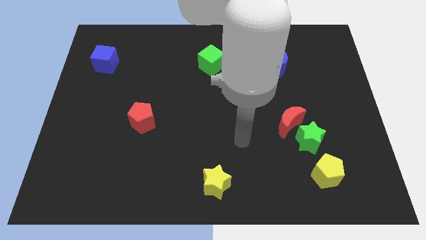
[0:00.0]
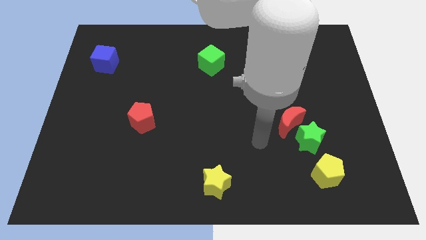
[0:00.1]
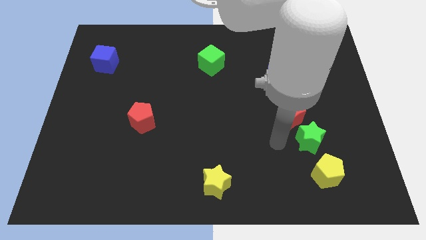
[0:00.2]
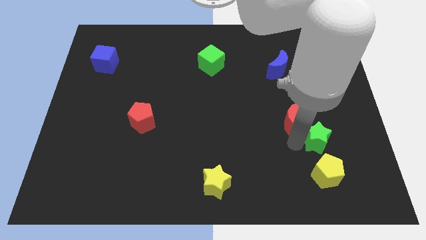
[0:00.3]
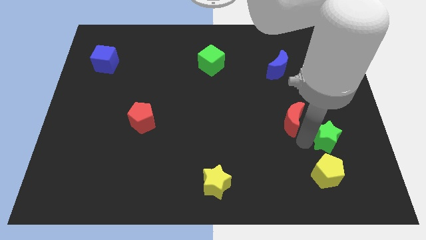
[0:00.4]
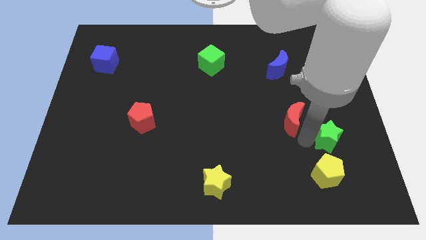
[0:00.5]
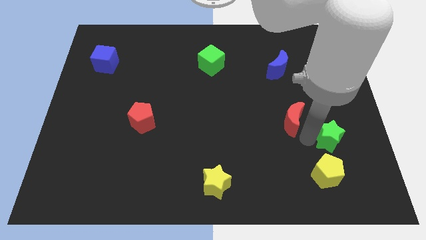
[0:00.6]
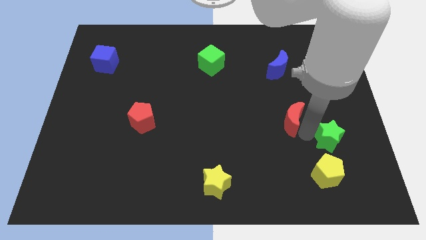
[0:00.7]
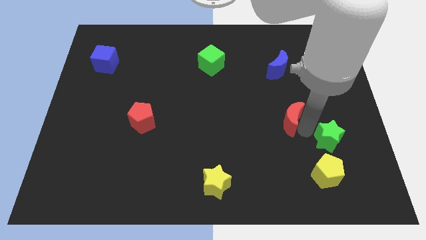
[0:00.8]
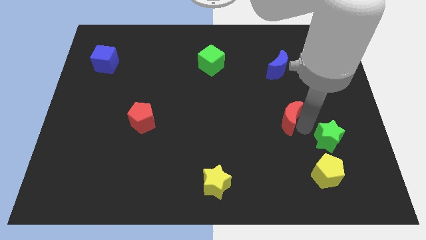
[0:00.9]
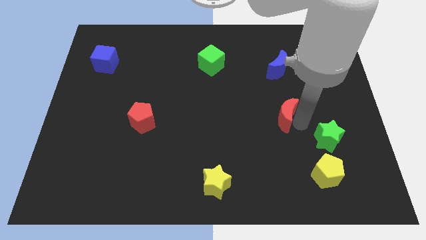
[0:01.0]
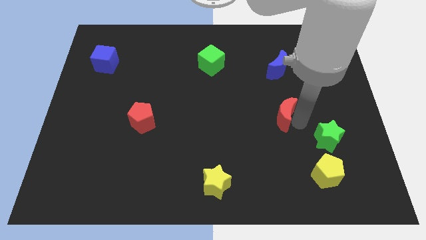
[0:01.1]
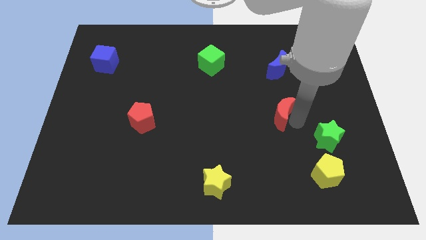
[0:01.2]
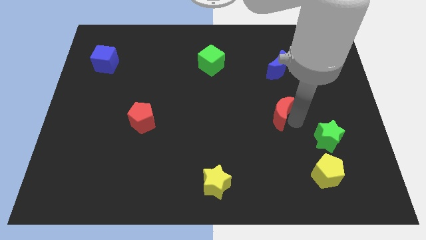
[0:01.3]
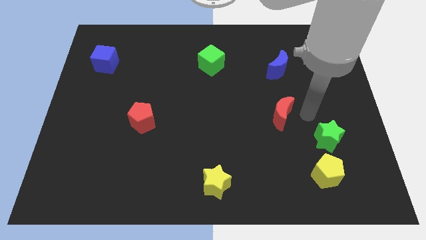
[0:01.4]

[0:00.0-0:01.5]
separate the red crescent from green star

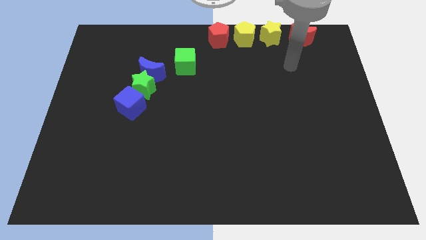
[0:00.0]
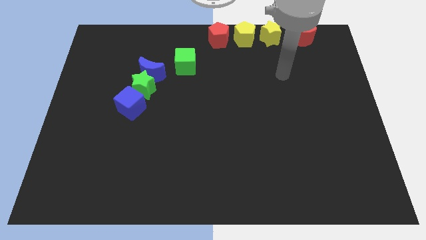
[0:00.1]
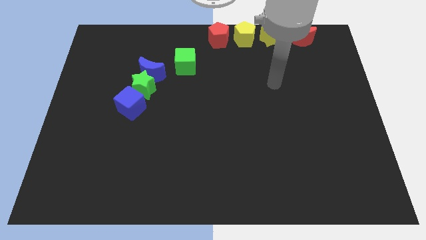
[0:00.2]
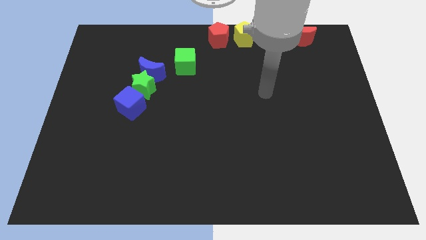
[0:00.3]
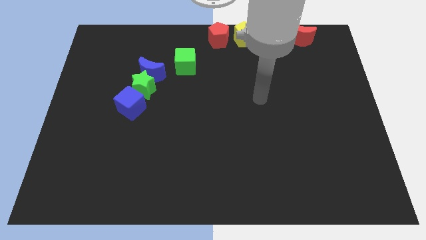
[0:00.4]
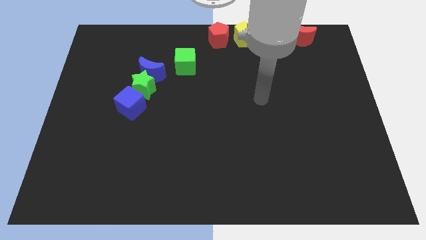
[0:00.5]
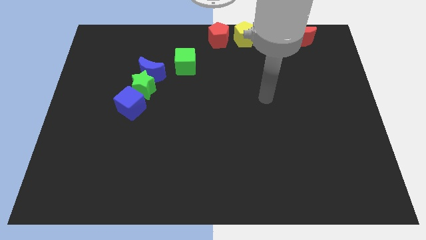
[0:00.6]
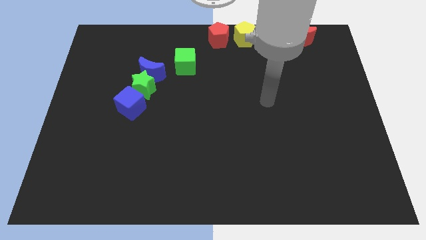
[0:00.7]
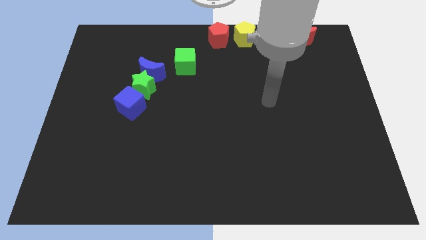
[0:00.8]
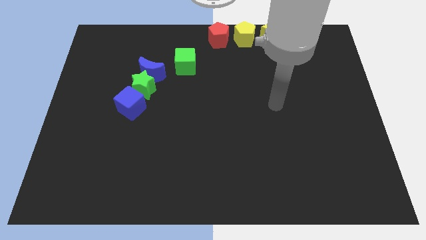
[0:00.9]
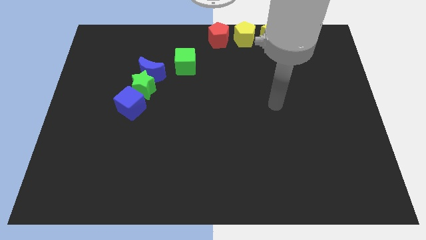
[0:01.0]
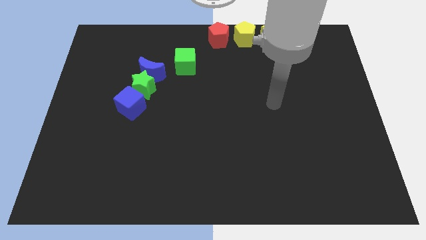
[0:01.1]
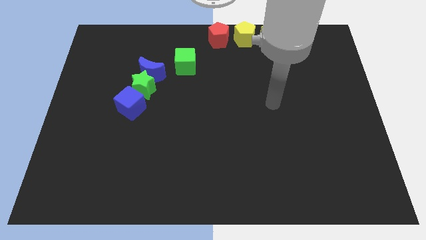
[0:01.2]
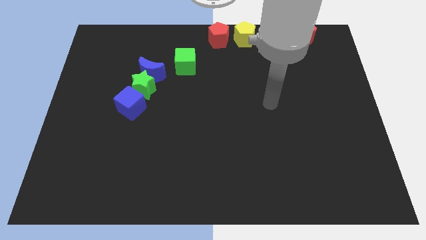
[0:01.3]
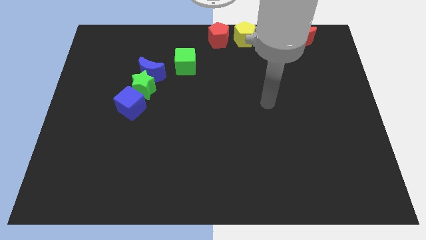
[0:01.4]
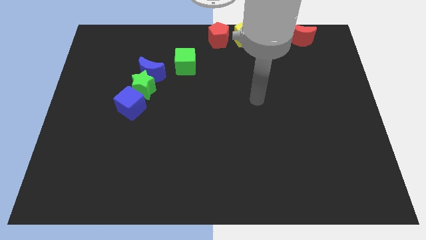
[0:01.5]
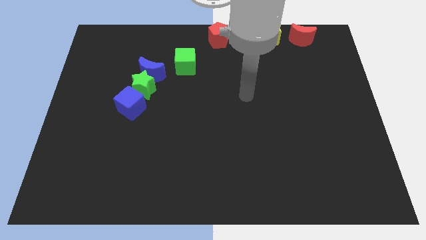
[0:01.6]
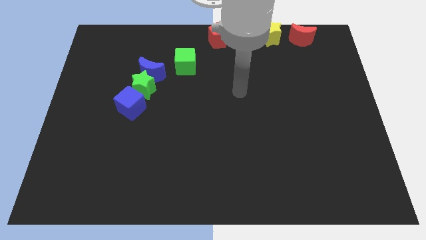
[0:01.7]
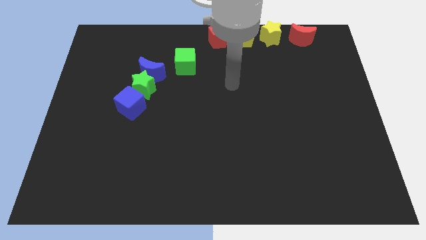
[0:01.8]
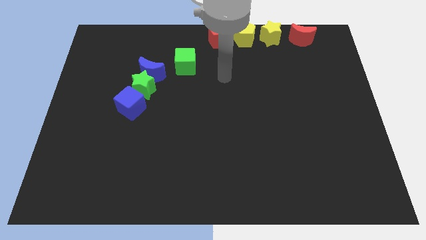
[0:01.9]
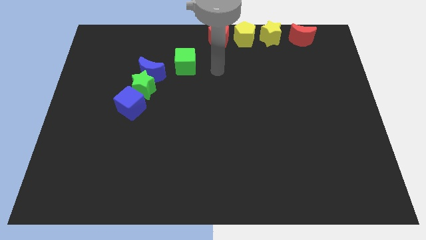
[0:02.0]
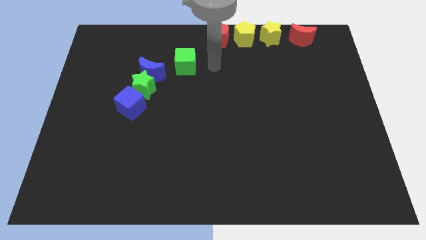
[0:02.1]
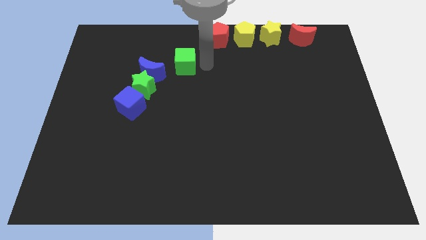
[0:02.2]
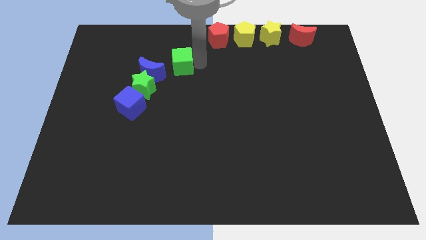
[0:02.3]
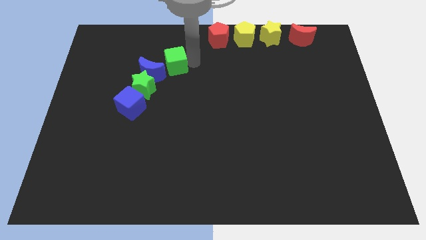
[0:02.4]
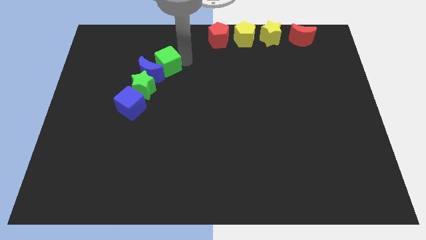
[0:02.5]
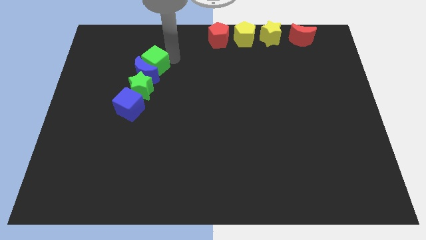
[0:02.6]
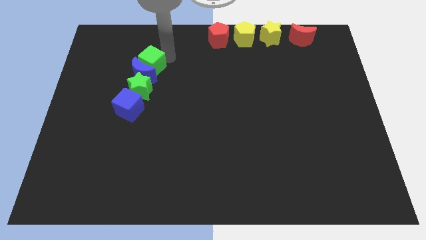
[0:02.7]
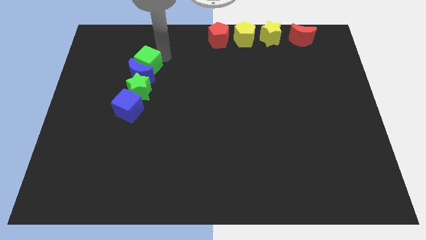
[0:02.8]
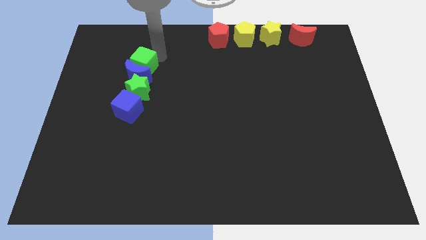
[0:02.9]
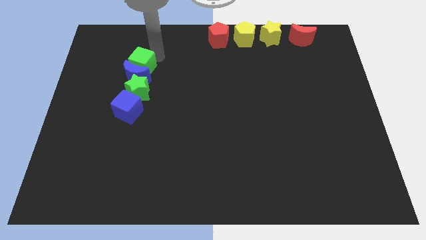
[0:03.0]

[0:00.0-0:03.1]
push the green cube into the blue moon

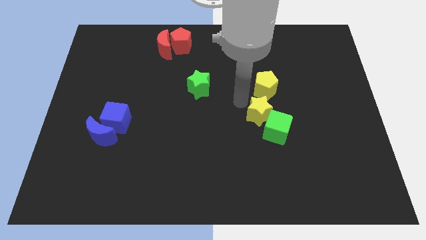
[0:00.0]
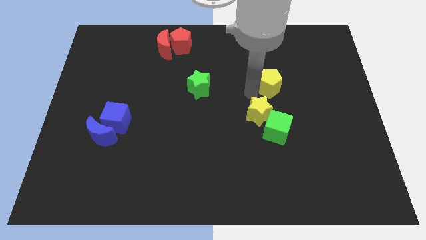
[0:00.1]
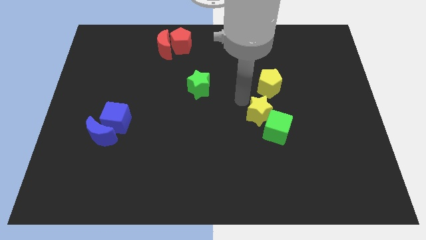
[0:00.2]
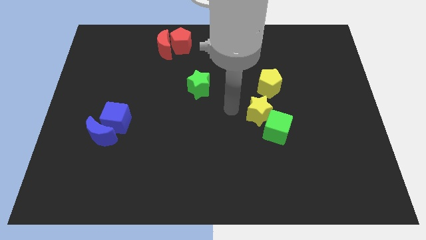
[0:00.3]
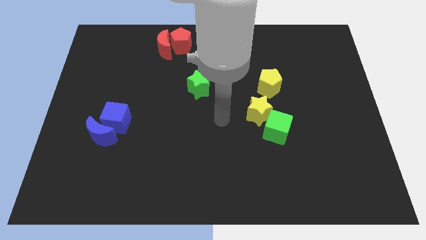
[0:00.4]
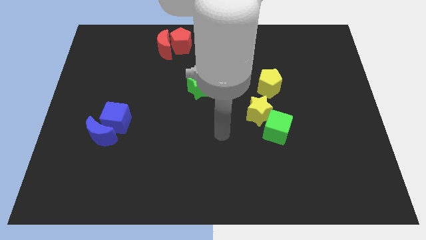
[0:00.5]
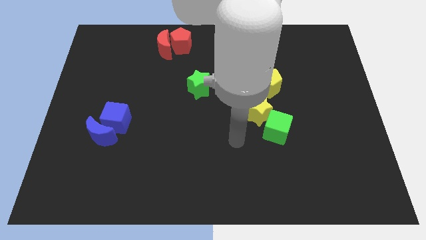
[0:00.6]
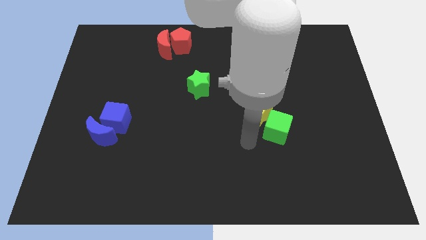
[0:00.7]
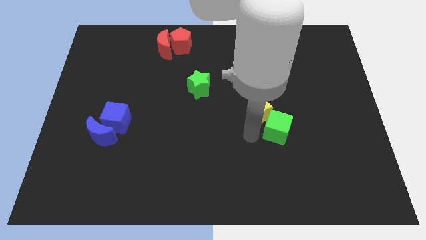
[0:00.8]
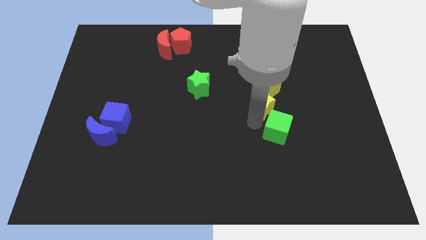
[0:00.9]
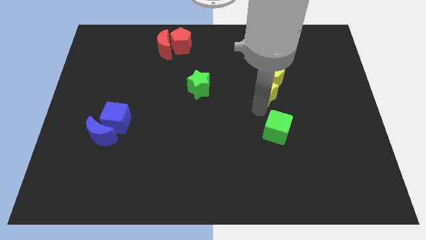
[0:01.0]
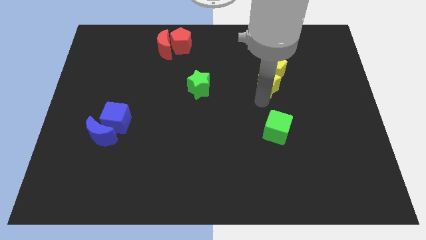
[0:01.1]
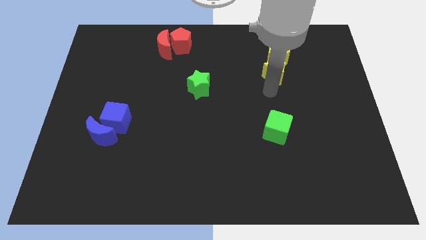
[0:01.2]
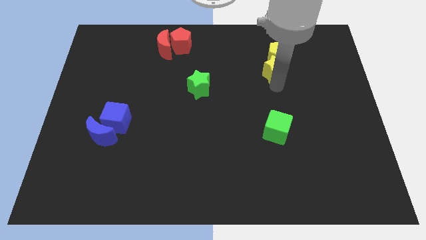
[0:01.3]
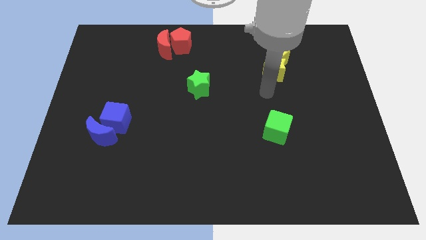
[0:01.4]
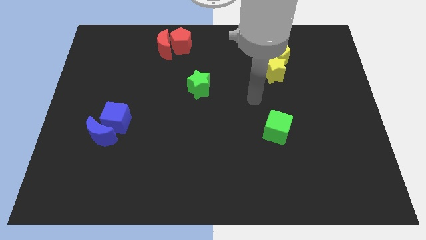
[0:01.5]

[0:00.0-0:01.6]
push the yellow pentagon with a yellow star towards the top right of the board

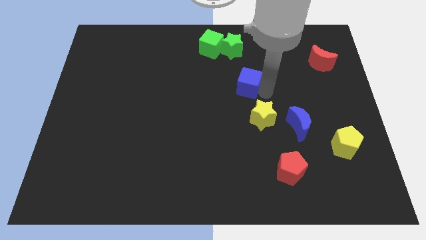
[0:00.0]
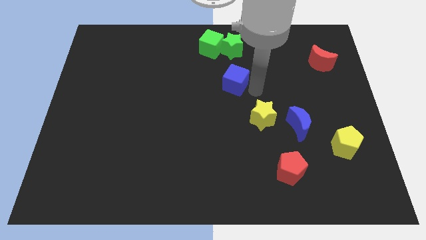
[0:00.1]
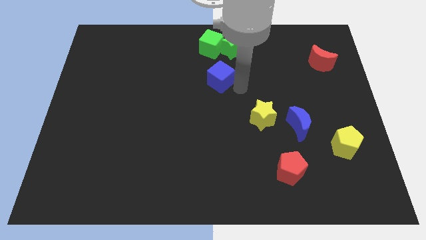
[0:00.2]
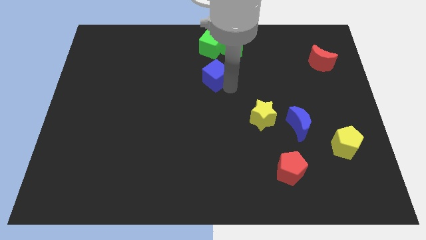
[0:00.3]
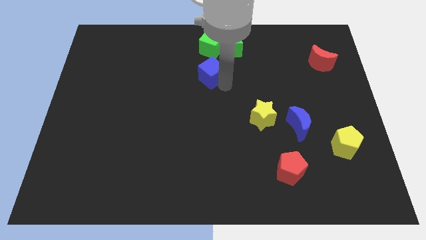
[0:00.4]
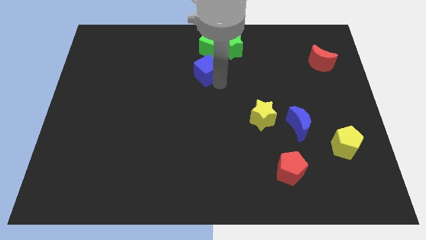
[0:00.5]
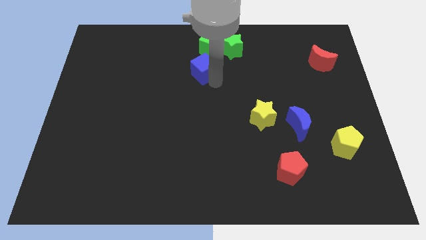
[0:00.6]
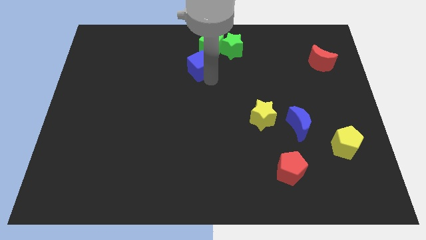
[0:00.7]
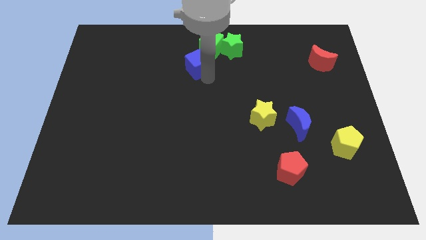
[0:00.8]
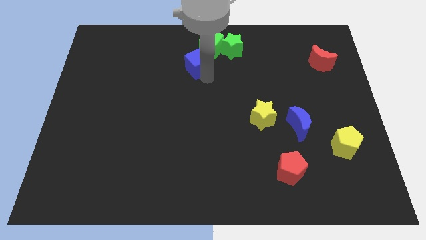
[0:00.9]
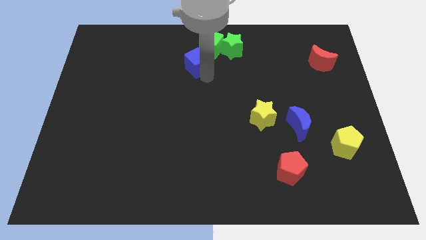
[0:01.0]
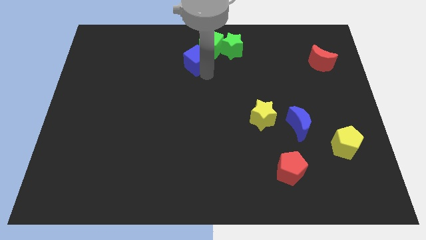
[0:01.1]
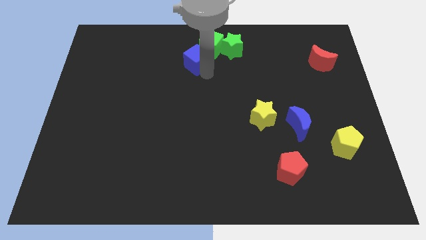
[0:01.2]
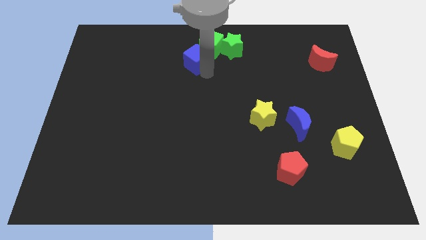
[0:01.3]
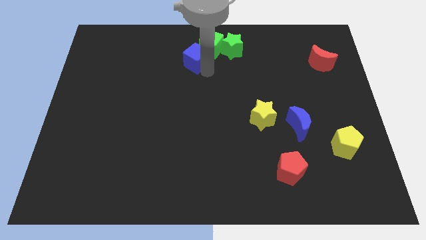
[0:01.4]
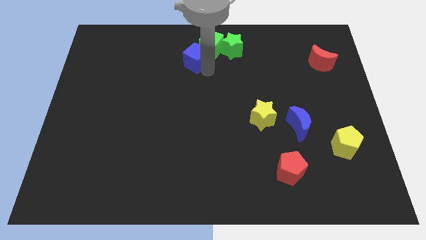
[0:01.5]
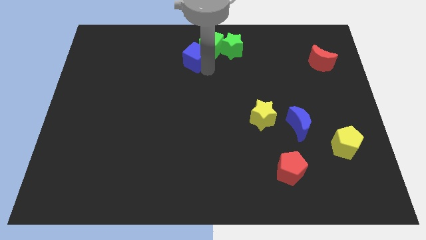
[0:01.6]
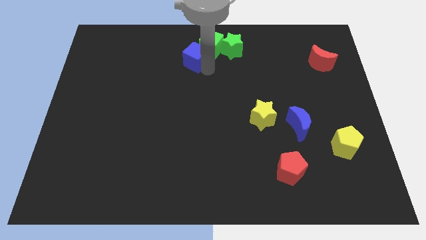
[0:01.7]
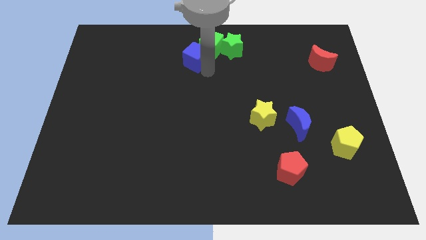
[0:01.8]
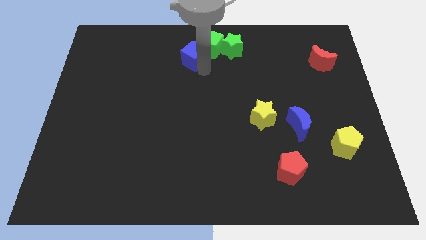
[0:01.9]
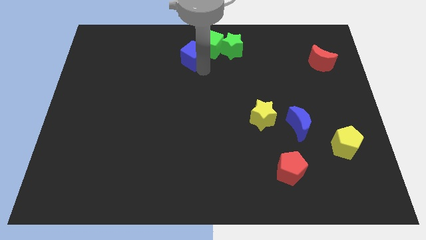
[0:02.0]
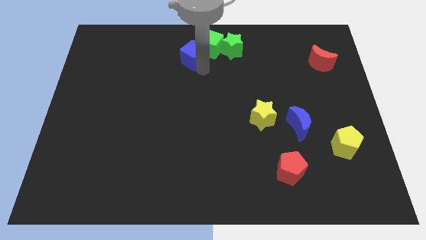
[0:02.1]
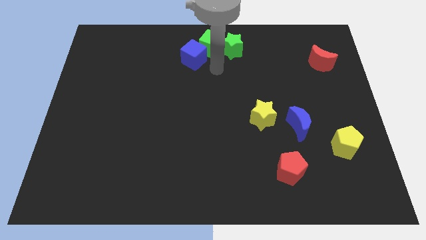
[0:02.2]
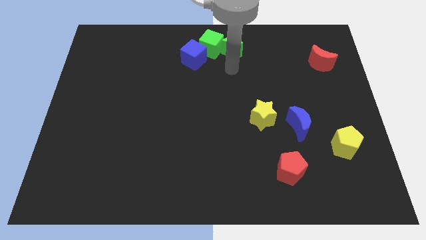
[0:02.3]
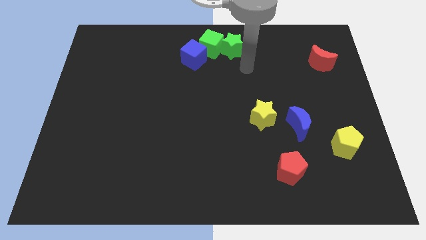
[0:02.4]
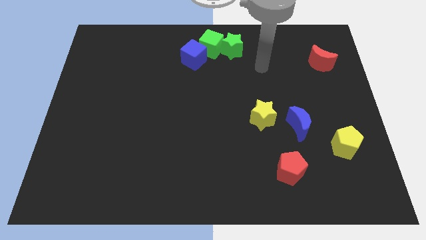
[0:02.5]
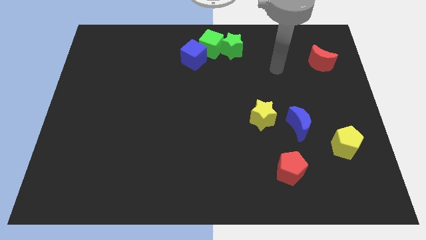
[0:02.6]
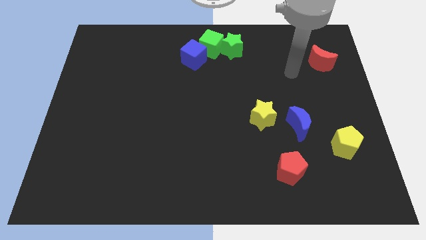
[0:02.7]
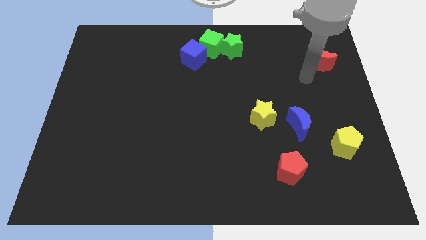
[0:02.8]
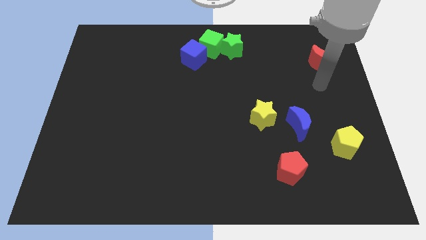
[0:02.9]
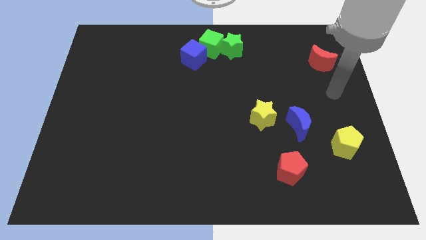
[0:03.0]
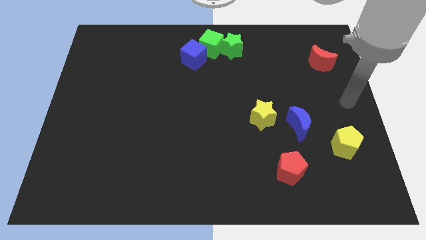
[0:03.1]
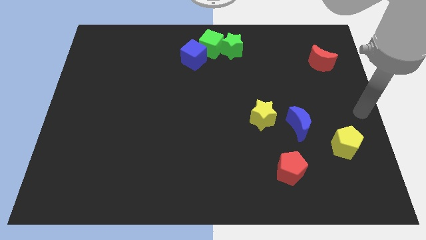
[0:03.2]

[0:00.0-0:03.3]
place blue cube at the bottom left of green cube
